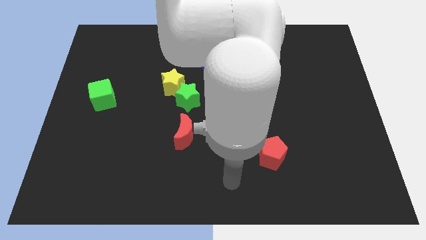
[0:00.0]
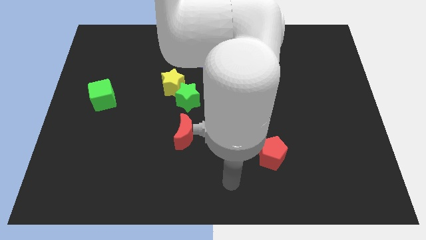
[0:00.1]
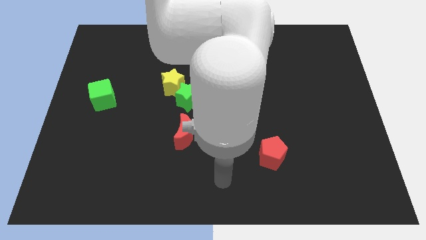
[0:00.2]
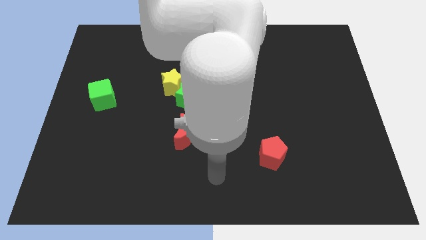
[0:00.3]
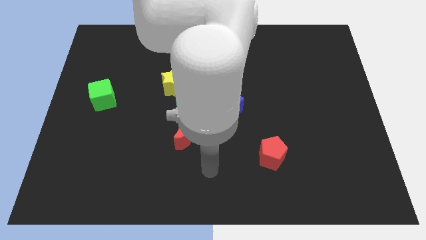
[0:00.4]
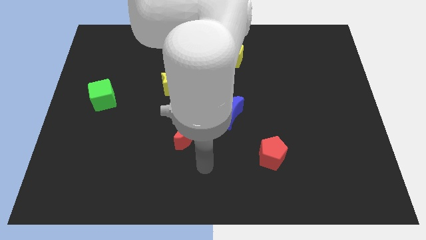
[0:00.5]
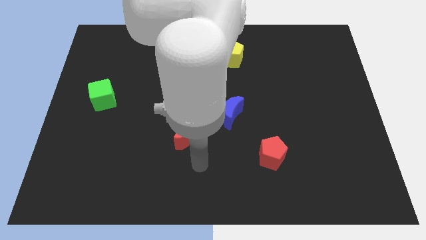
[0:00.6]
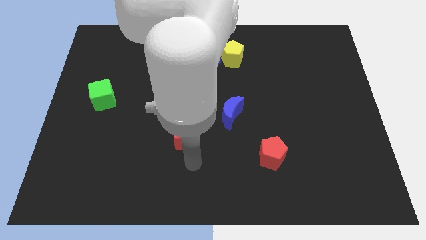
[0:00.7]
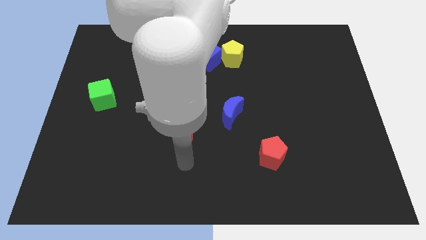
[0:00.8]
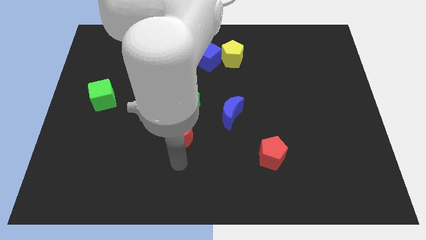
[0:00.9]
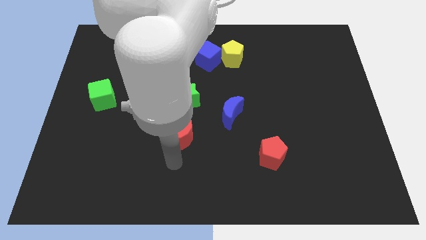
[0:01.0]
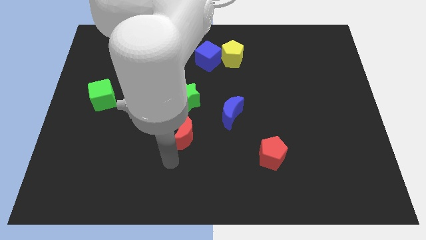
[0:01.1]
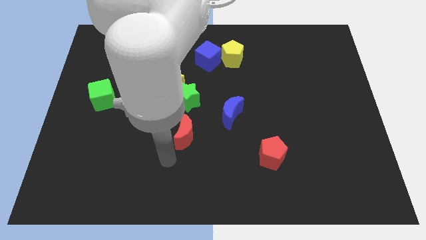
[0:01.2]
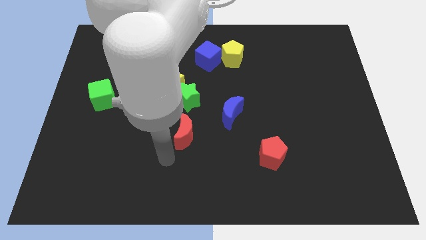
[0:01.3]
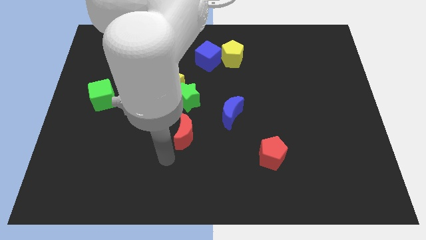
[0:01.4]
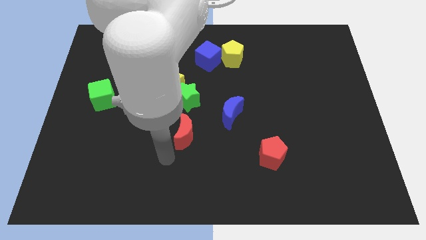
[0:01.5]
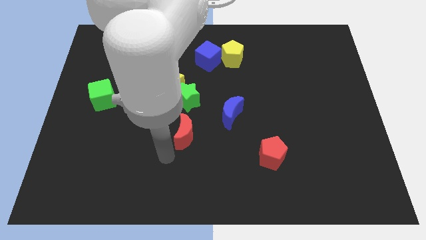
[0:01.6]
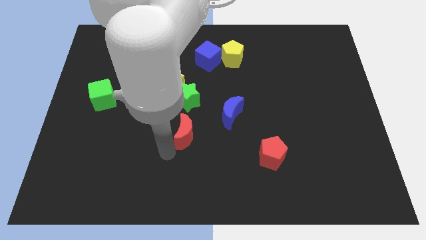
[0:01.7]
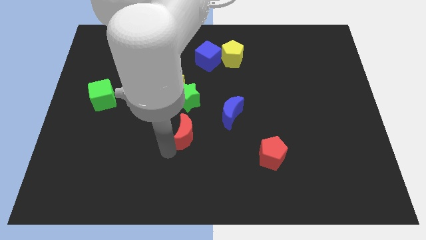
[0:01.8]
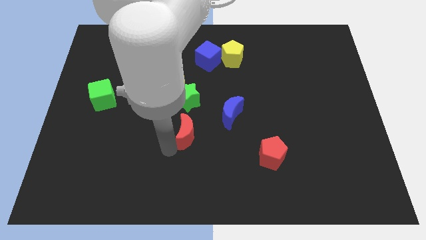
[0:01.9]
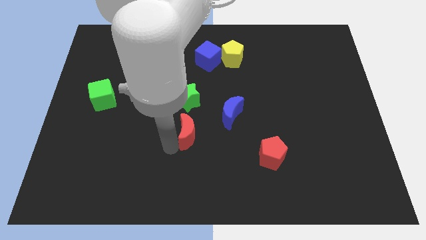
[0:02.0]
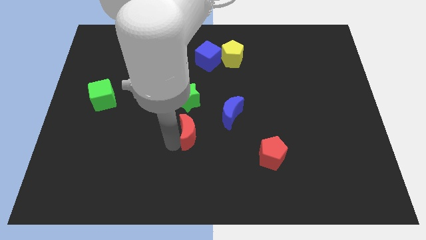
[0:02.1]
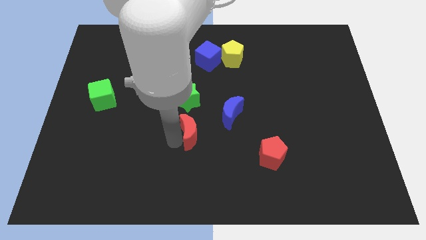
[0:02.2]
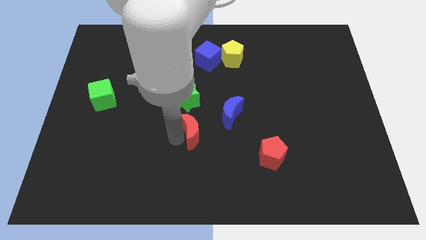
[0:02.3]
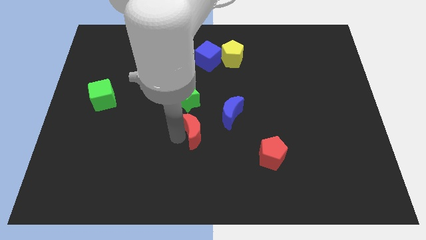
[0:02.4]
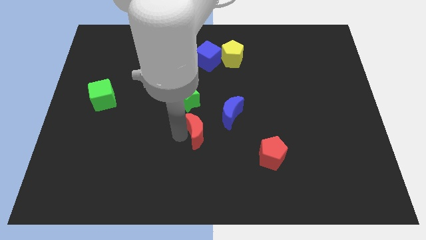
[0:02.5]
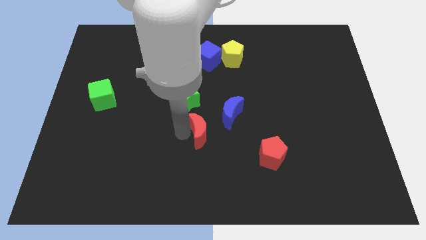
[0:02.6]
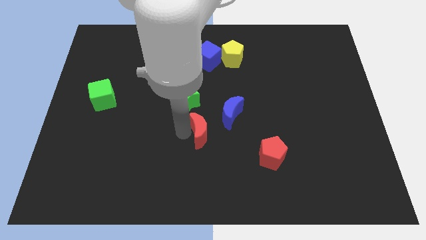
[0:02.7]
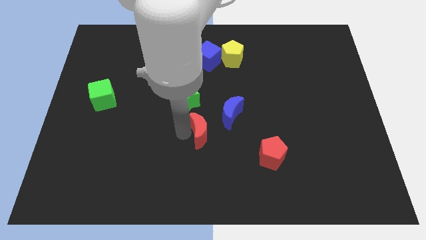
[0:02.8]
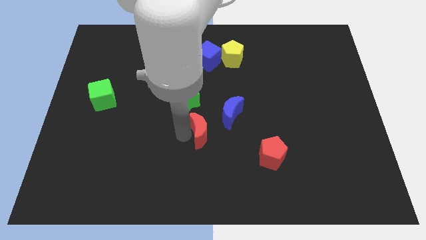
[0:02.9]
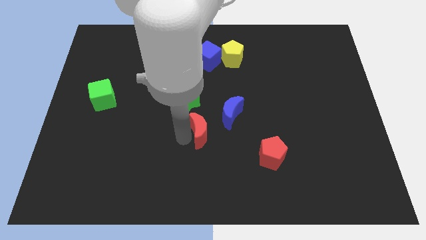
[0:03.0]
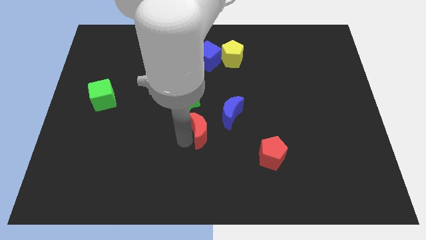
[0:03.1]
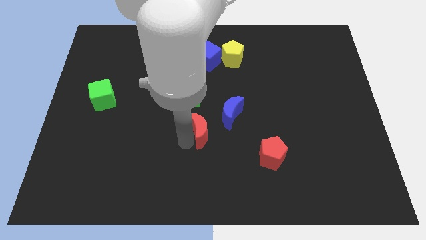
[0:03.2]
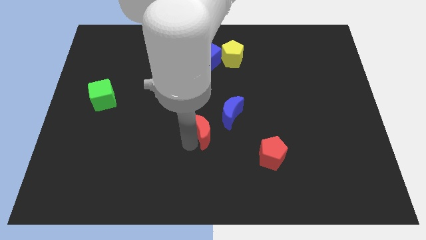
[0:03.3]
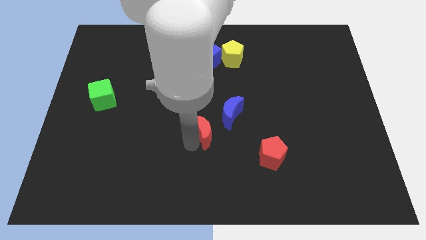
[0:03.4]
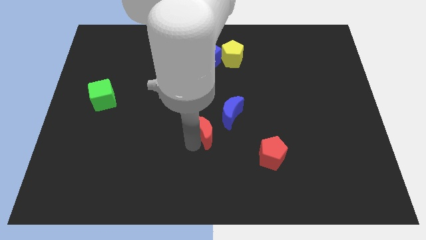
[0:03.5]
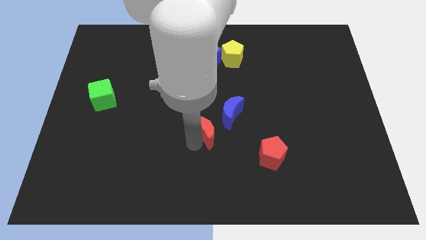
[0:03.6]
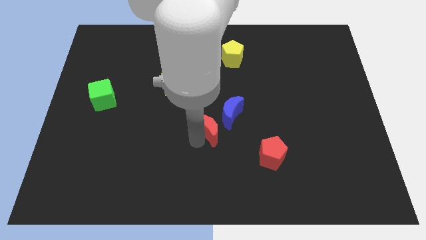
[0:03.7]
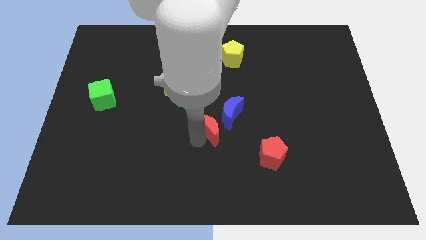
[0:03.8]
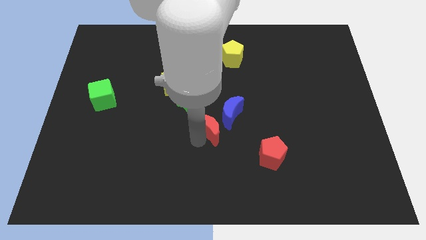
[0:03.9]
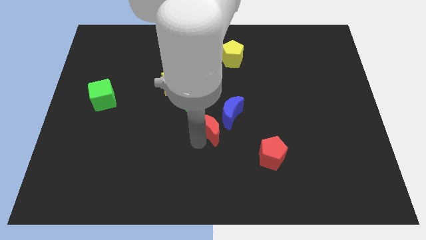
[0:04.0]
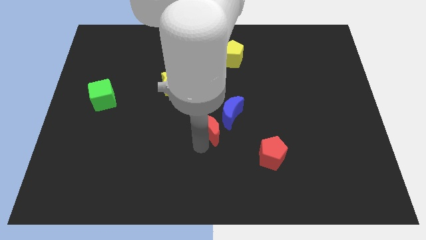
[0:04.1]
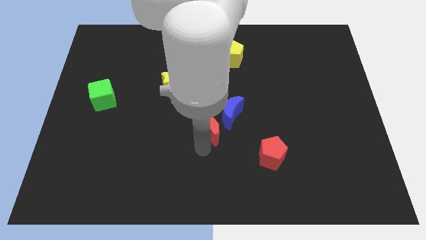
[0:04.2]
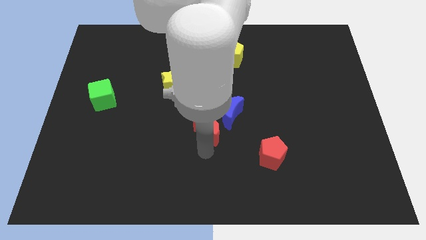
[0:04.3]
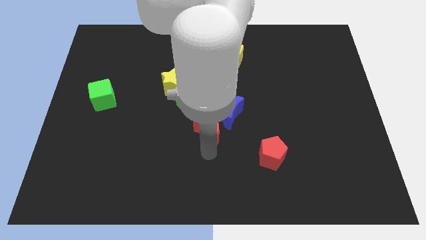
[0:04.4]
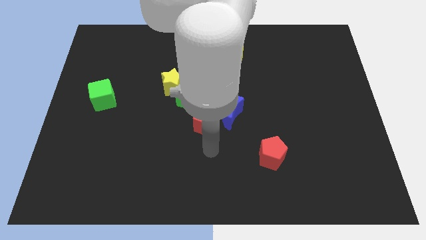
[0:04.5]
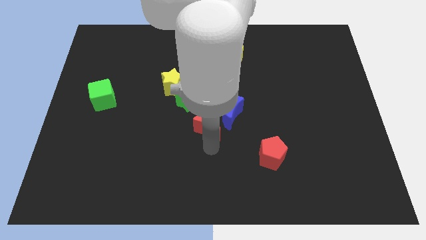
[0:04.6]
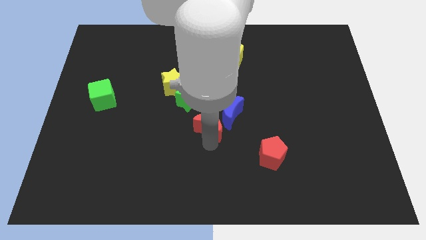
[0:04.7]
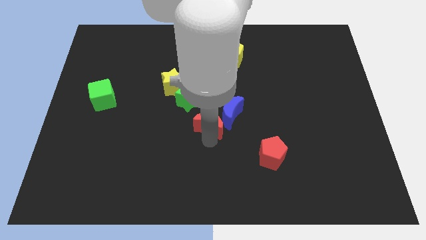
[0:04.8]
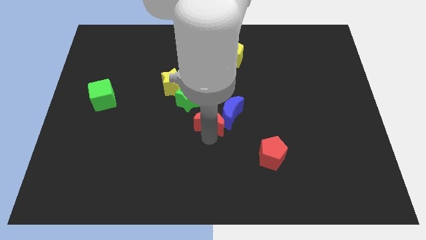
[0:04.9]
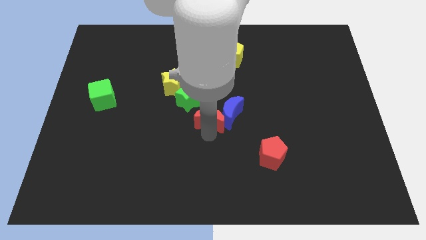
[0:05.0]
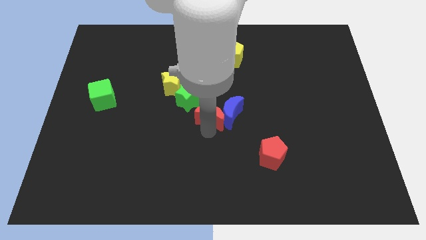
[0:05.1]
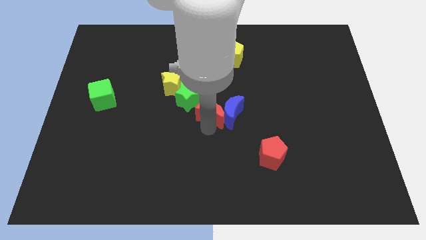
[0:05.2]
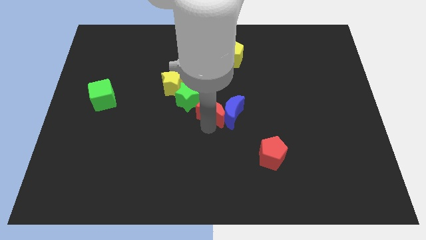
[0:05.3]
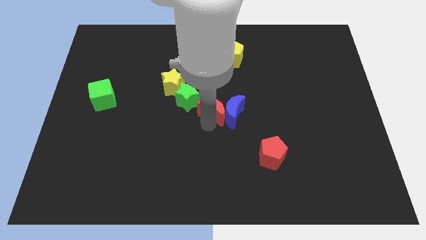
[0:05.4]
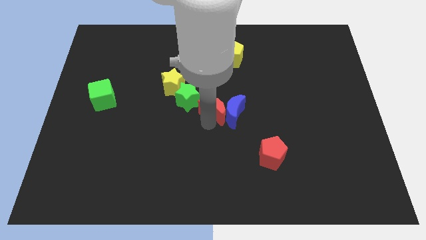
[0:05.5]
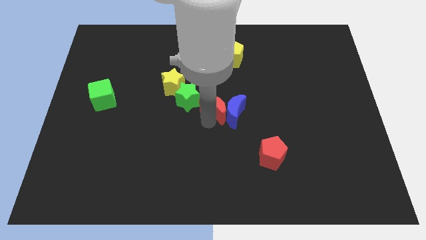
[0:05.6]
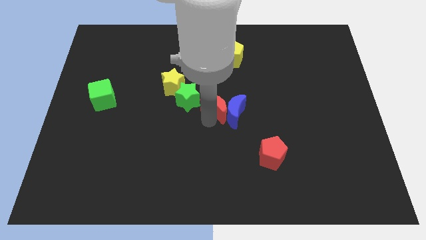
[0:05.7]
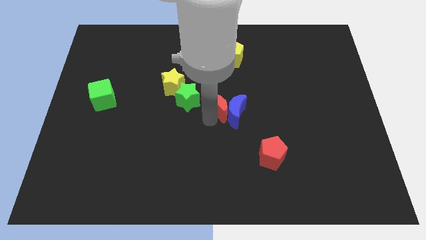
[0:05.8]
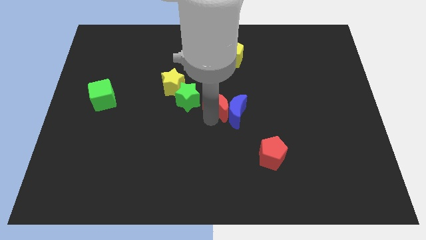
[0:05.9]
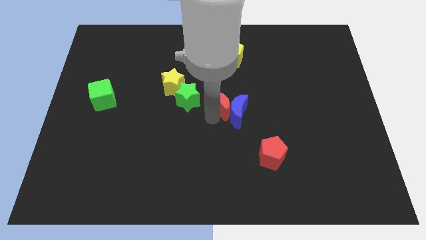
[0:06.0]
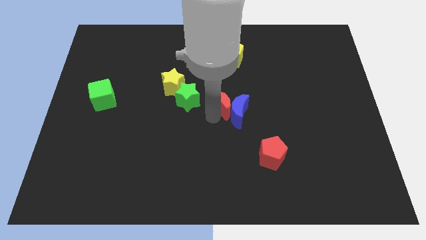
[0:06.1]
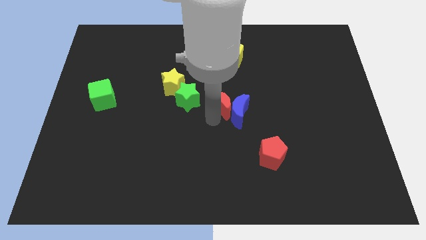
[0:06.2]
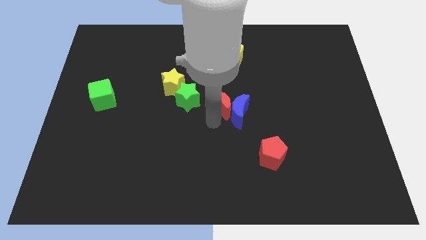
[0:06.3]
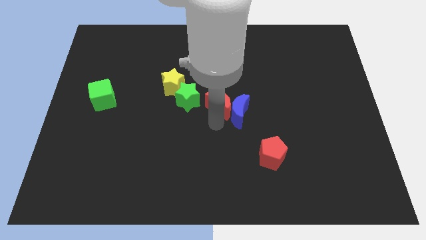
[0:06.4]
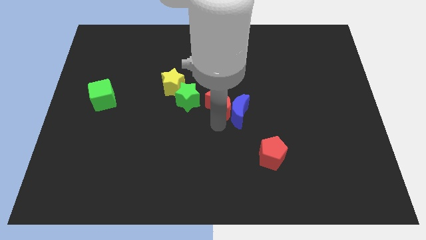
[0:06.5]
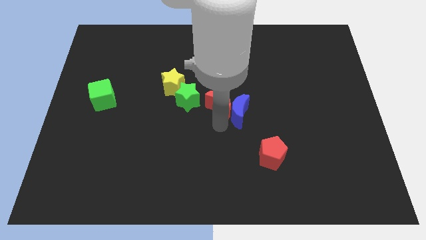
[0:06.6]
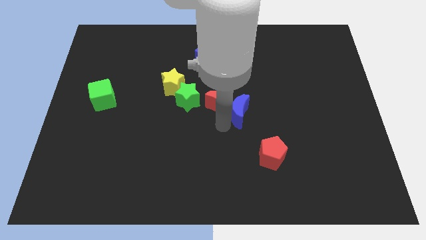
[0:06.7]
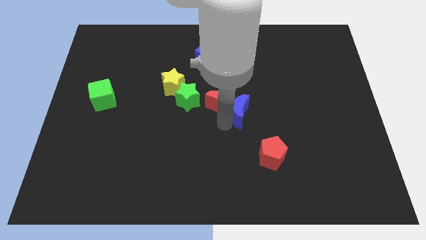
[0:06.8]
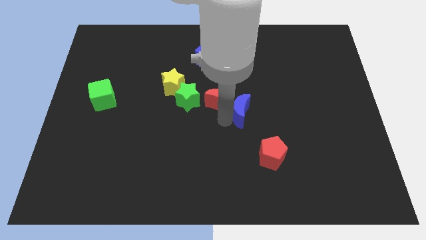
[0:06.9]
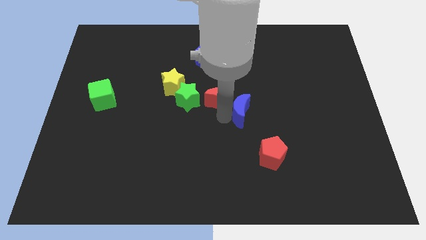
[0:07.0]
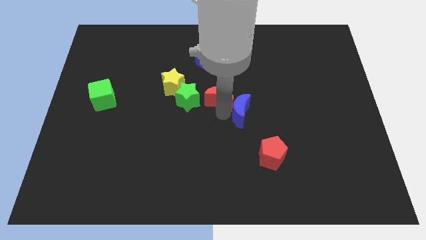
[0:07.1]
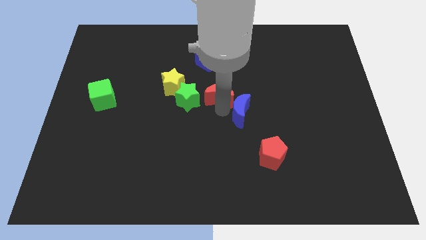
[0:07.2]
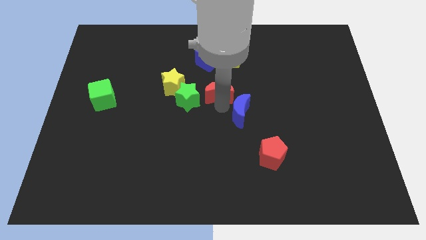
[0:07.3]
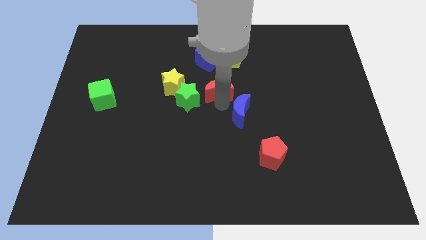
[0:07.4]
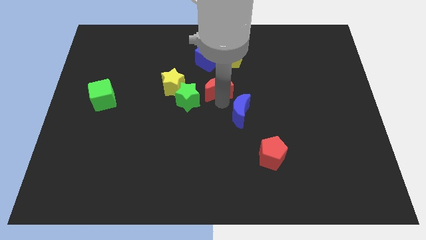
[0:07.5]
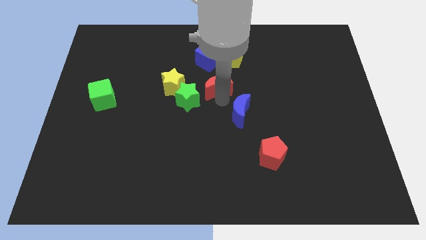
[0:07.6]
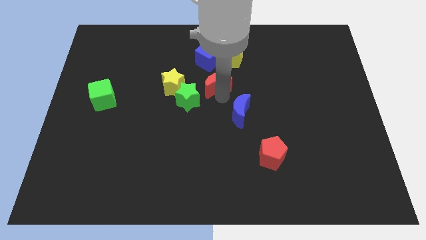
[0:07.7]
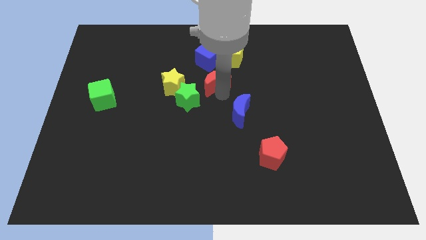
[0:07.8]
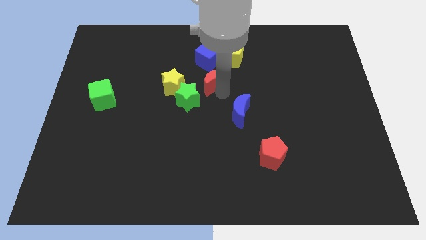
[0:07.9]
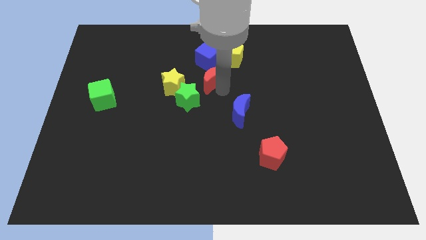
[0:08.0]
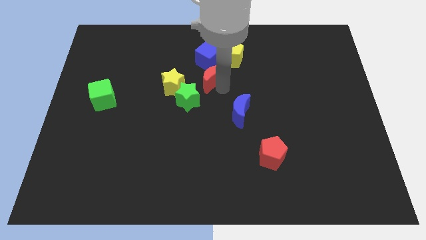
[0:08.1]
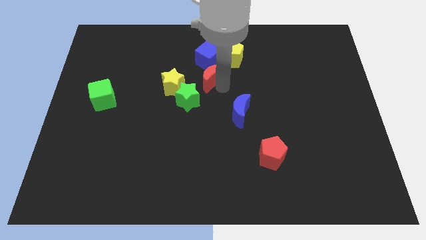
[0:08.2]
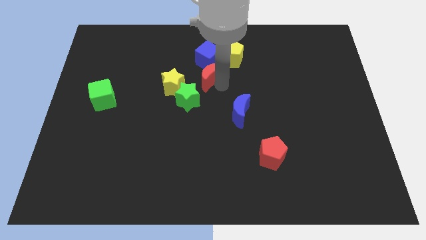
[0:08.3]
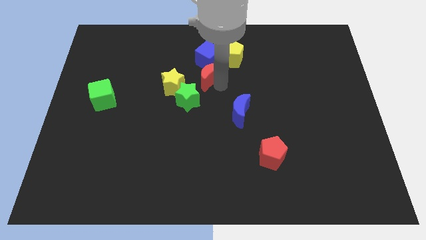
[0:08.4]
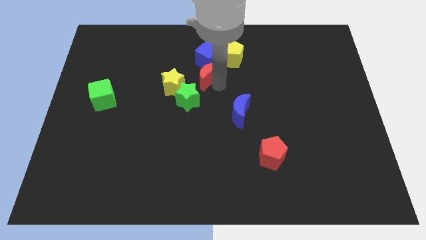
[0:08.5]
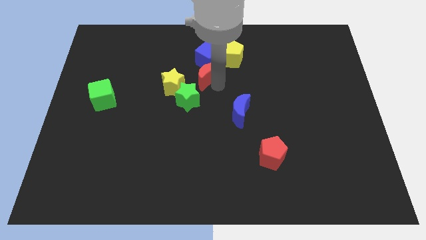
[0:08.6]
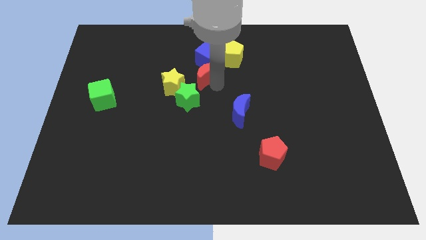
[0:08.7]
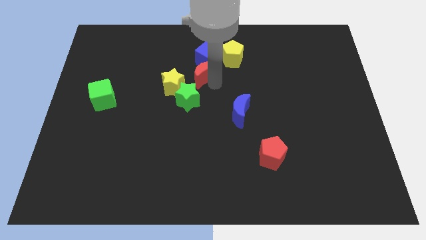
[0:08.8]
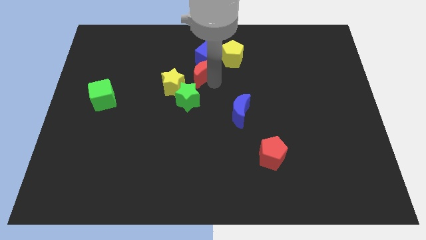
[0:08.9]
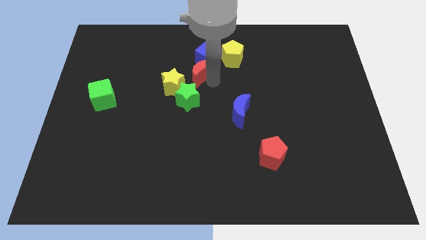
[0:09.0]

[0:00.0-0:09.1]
move the red moon close to the blue cube
